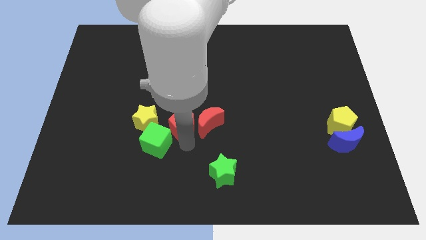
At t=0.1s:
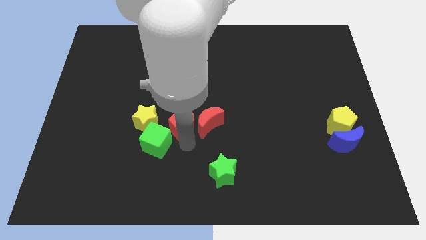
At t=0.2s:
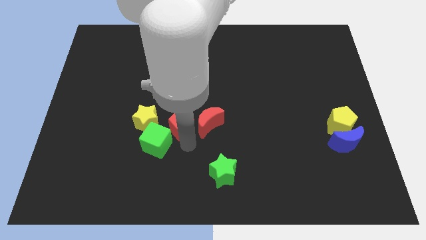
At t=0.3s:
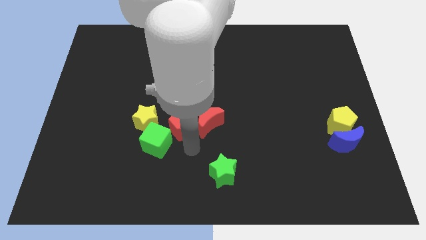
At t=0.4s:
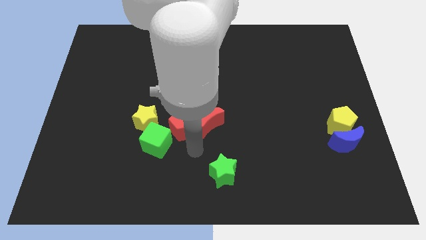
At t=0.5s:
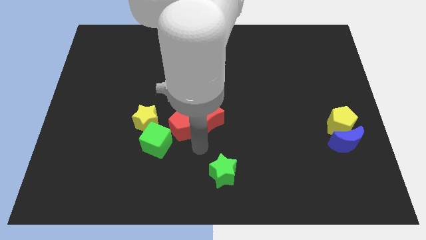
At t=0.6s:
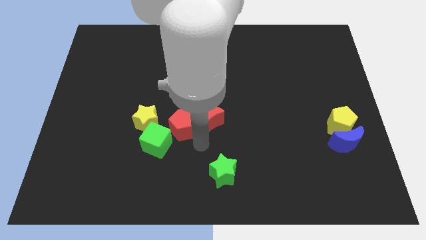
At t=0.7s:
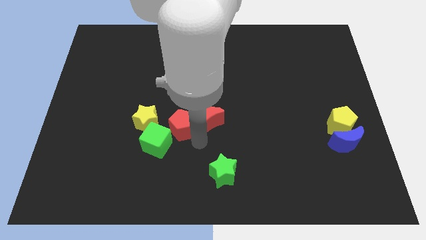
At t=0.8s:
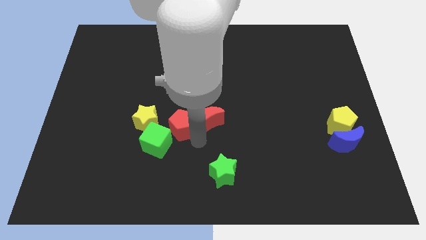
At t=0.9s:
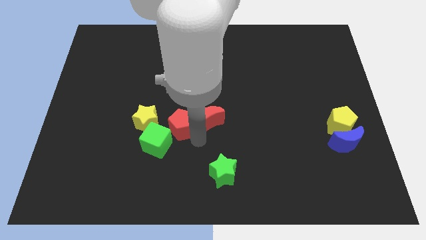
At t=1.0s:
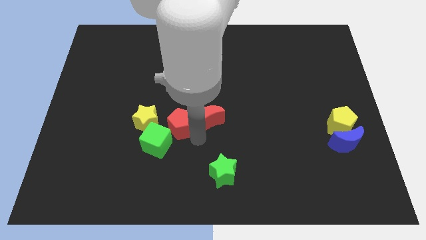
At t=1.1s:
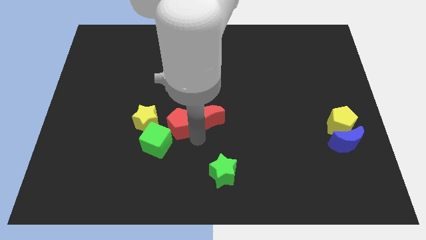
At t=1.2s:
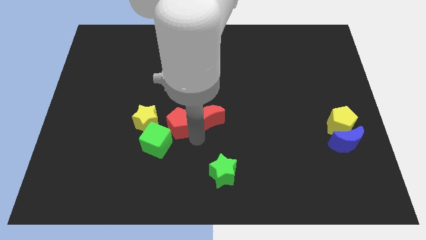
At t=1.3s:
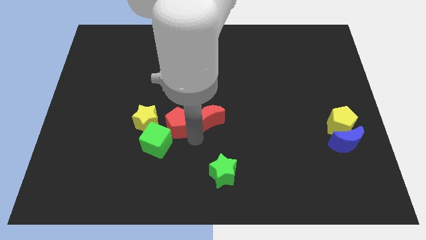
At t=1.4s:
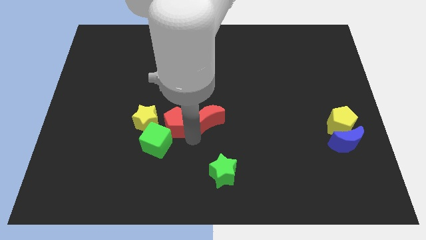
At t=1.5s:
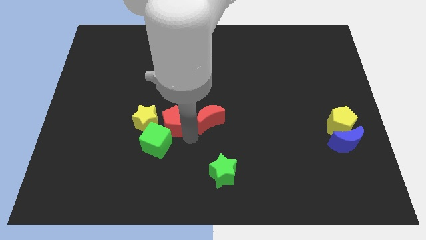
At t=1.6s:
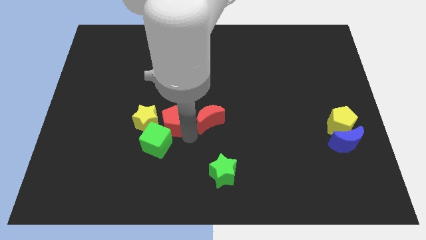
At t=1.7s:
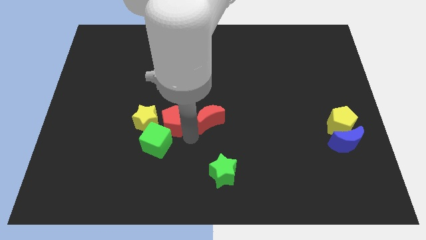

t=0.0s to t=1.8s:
push the red pentagon slightly upwards

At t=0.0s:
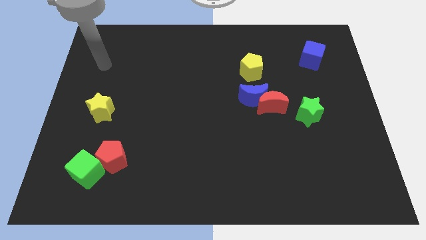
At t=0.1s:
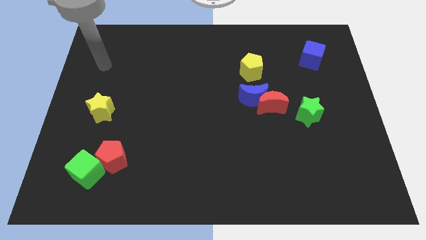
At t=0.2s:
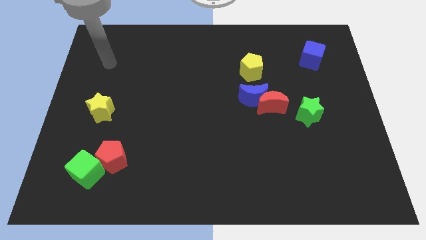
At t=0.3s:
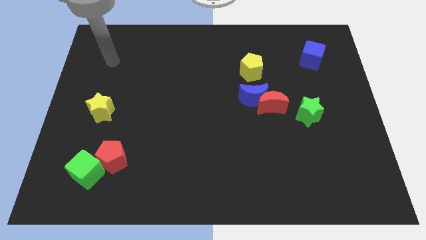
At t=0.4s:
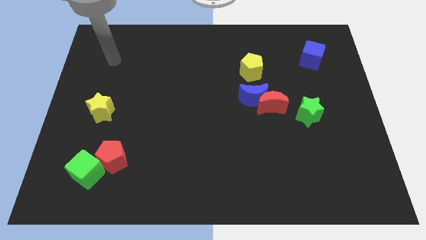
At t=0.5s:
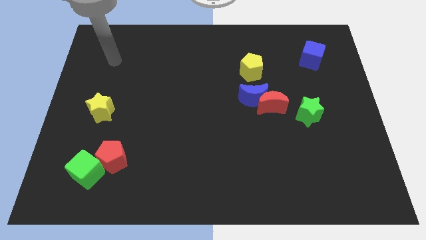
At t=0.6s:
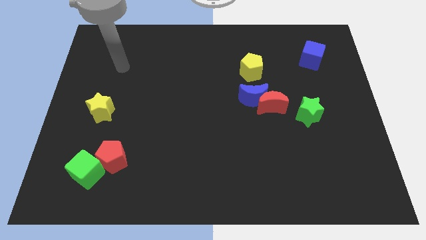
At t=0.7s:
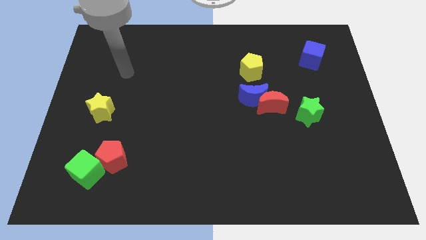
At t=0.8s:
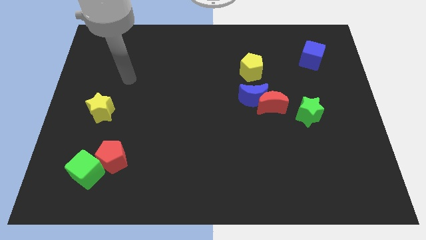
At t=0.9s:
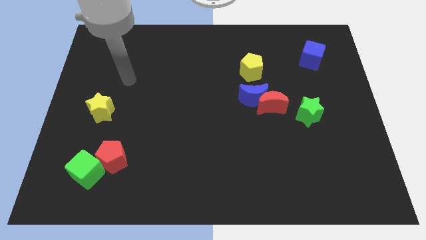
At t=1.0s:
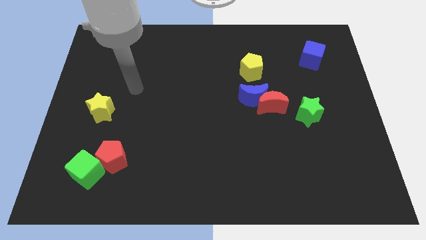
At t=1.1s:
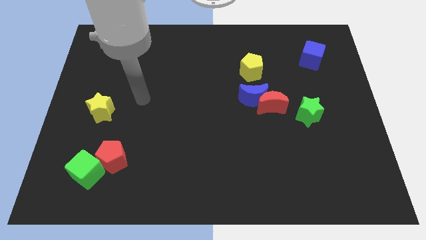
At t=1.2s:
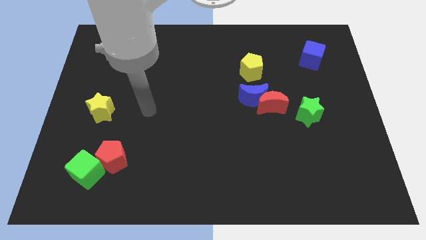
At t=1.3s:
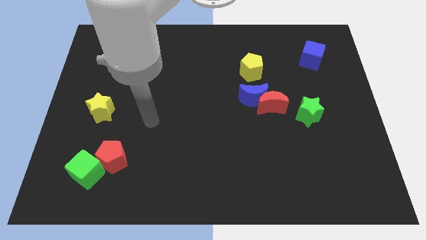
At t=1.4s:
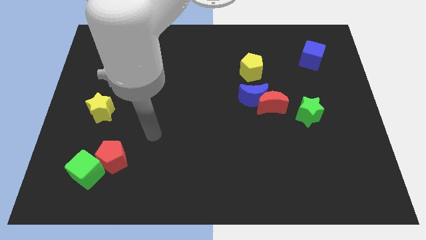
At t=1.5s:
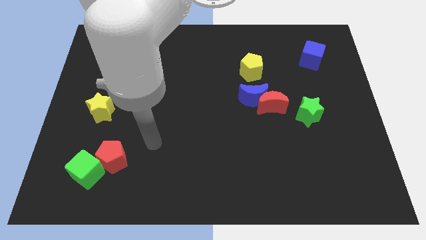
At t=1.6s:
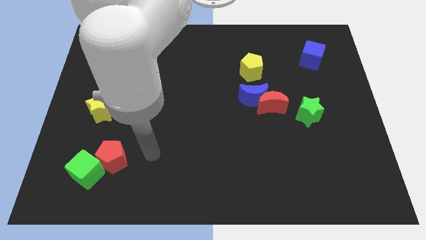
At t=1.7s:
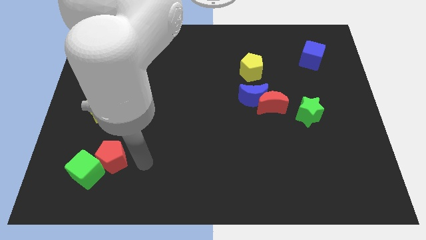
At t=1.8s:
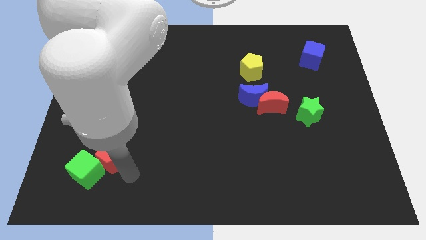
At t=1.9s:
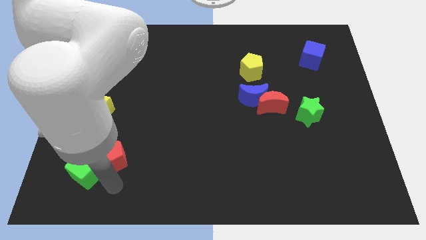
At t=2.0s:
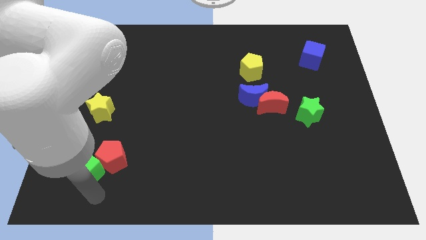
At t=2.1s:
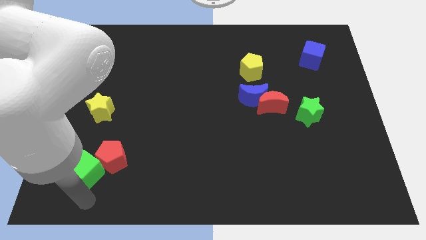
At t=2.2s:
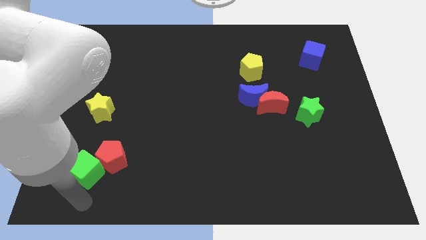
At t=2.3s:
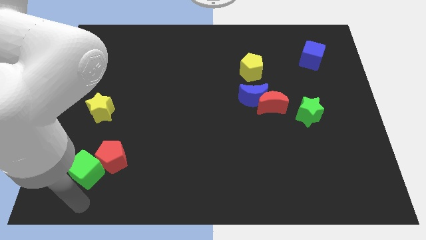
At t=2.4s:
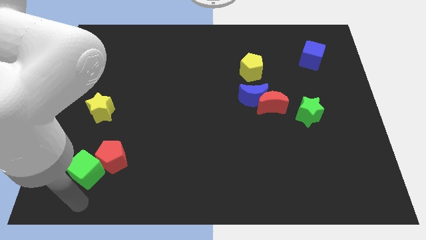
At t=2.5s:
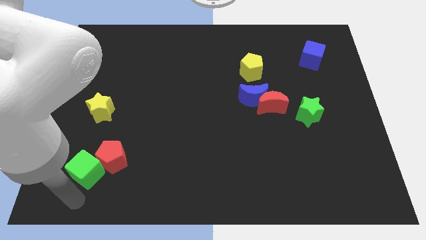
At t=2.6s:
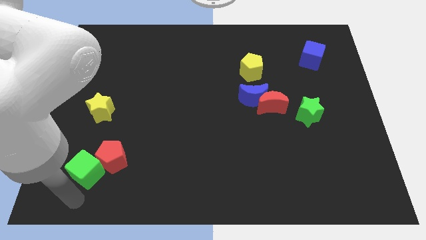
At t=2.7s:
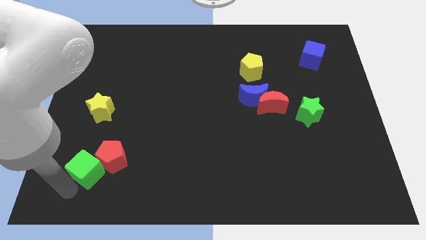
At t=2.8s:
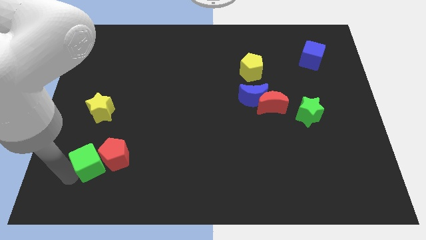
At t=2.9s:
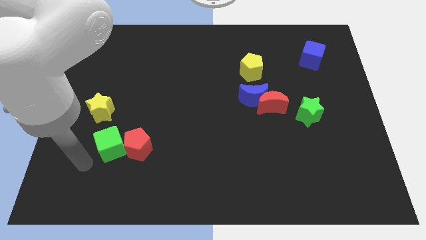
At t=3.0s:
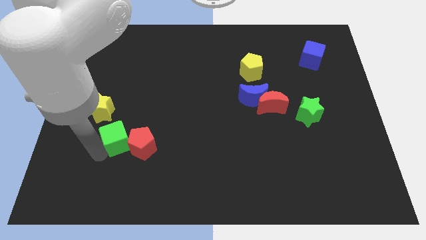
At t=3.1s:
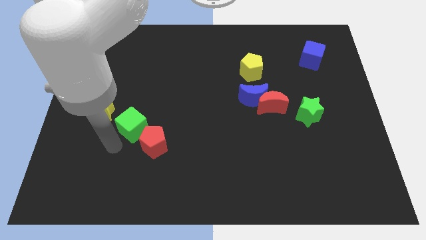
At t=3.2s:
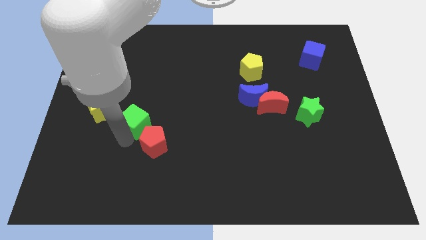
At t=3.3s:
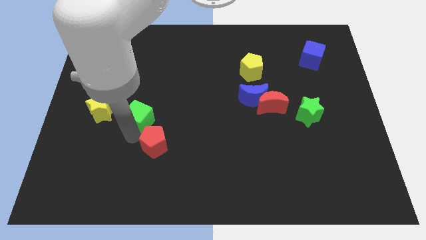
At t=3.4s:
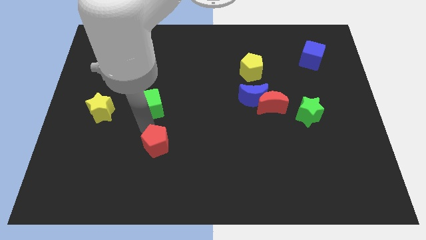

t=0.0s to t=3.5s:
place green cube to the right of yellow star

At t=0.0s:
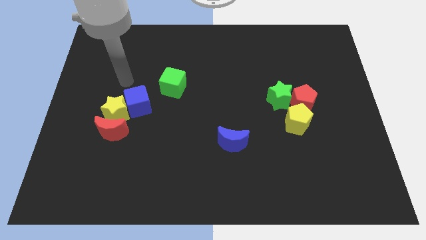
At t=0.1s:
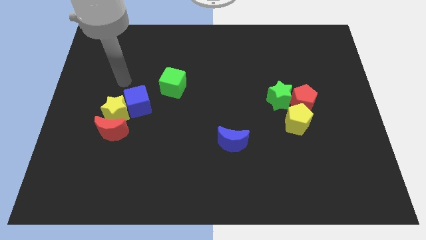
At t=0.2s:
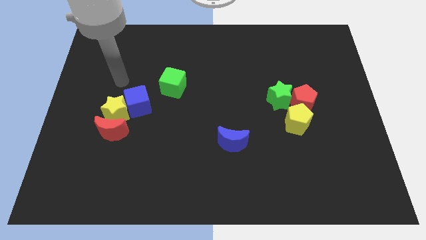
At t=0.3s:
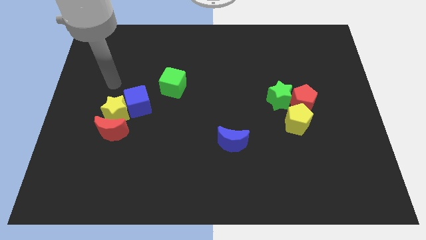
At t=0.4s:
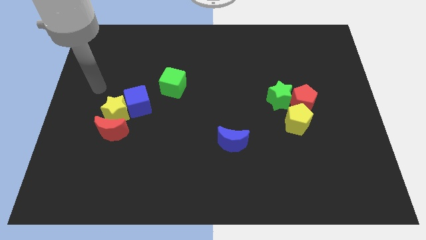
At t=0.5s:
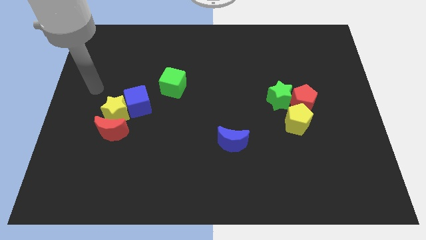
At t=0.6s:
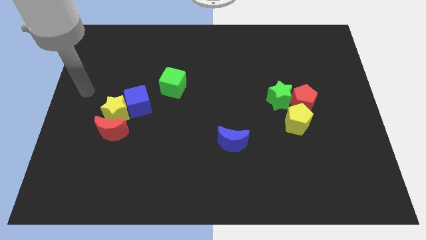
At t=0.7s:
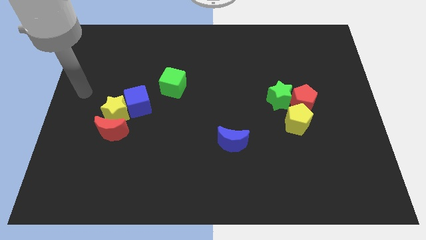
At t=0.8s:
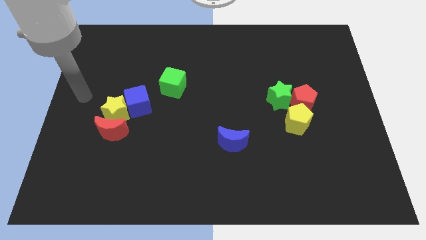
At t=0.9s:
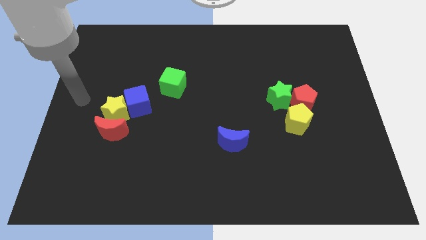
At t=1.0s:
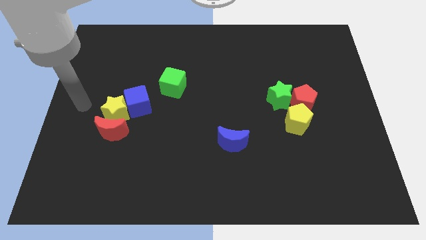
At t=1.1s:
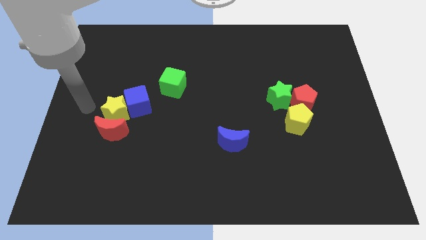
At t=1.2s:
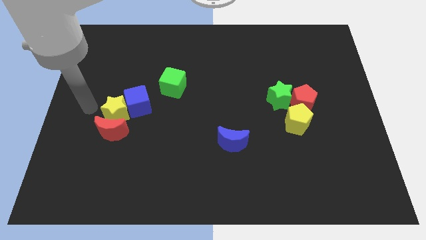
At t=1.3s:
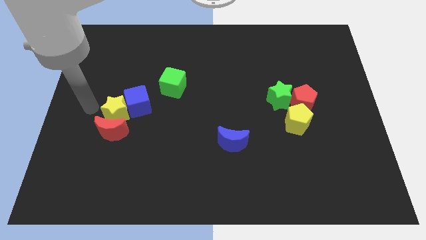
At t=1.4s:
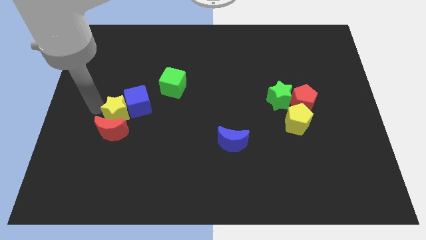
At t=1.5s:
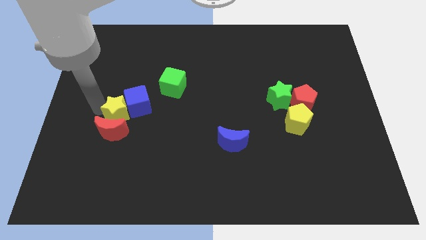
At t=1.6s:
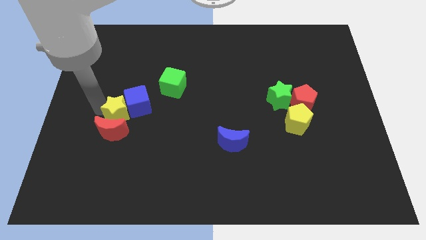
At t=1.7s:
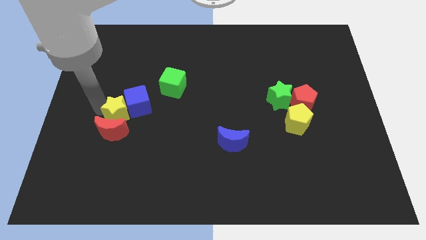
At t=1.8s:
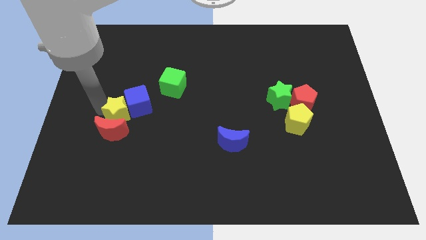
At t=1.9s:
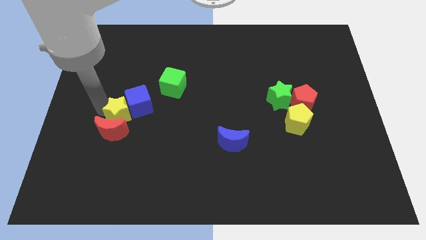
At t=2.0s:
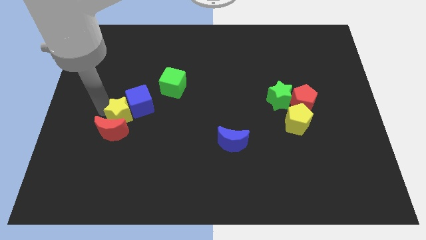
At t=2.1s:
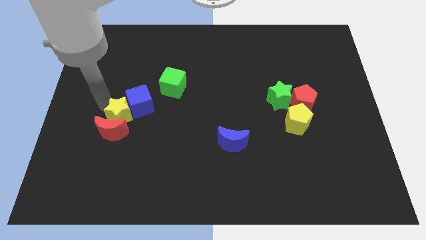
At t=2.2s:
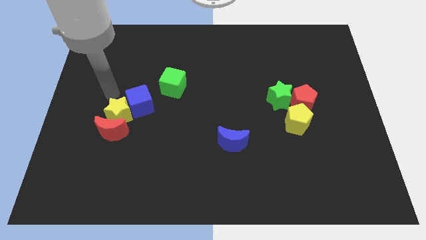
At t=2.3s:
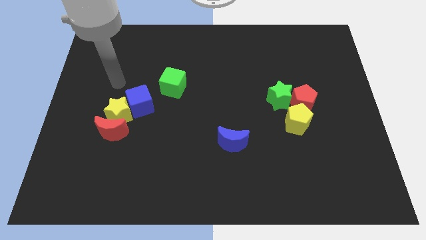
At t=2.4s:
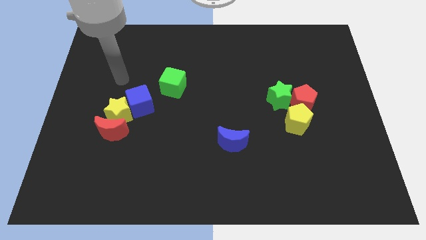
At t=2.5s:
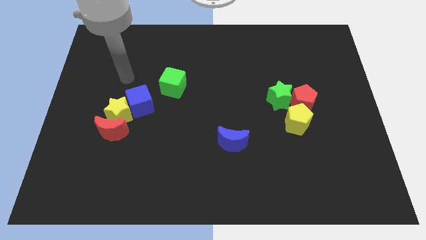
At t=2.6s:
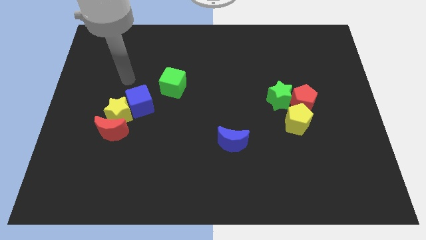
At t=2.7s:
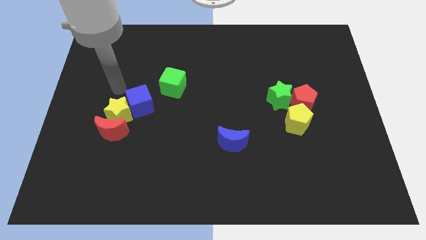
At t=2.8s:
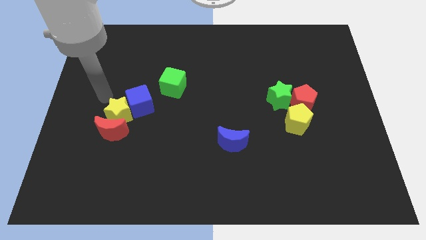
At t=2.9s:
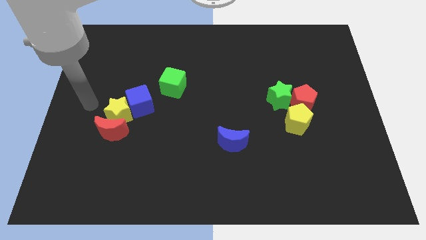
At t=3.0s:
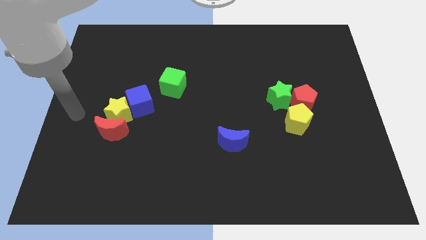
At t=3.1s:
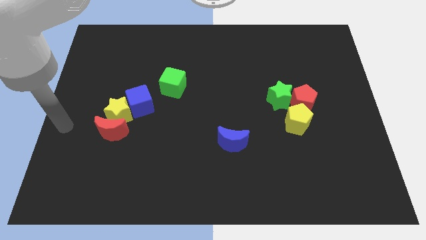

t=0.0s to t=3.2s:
slightly touch the yellow star

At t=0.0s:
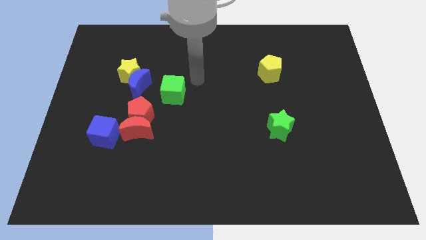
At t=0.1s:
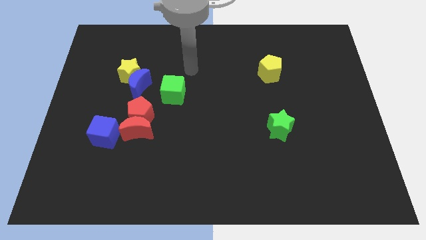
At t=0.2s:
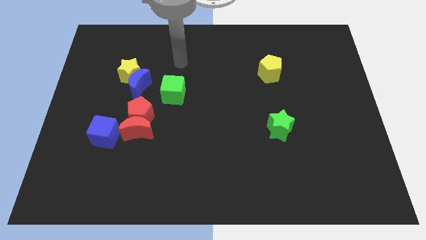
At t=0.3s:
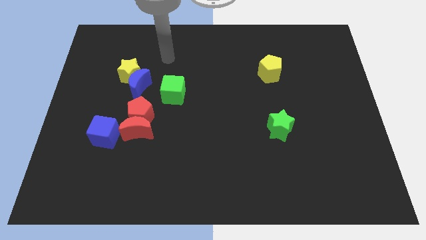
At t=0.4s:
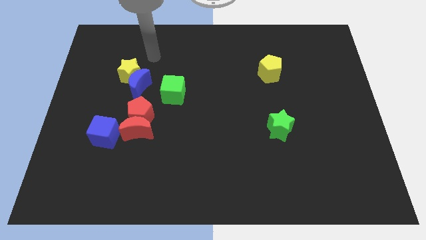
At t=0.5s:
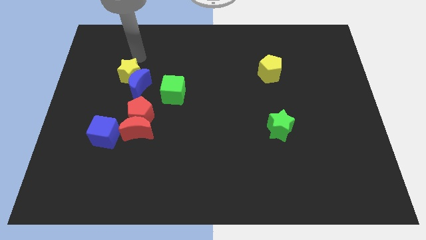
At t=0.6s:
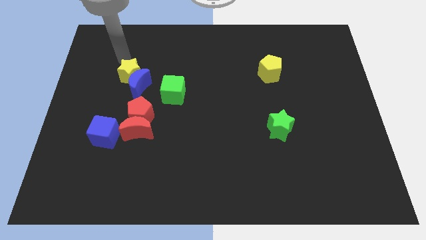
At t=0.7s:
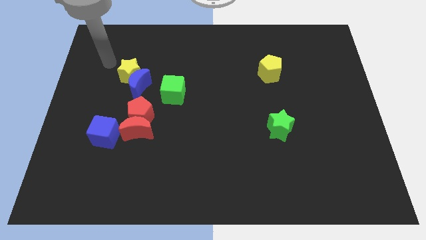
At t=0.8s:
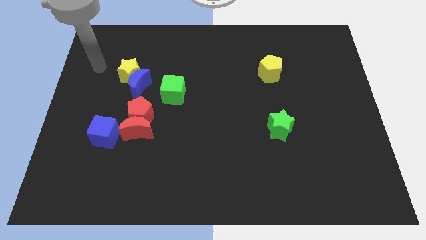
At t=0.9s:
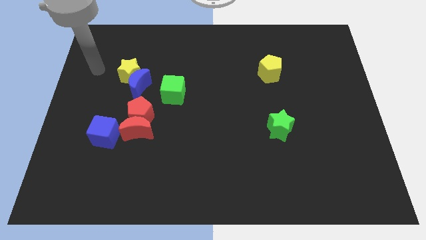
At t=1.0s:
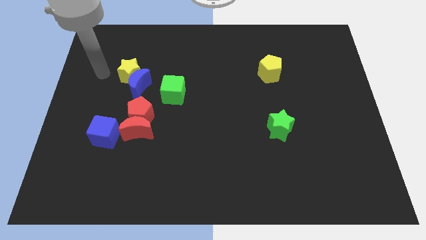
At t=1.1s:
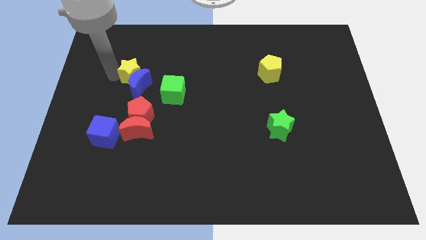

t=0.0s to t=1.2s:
move your arm to yellow star
